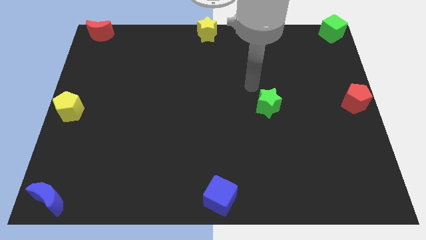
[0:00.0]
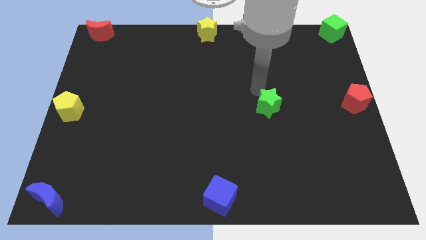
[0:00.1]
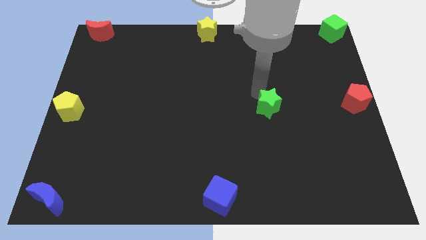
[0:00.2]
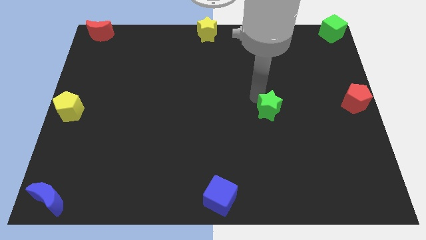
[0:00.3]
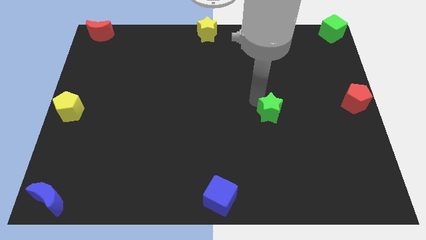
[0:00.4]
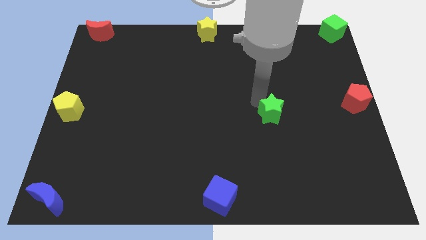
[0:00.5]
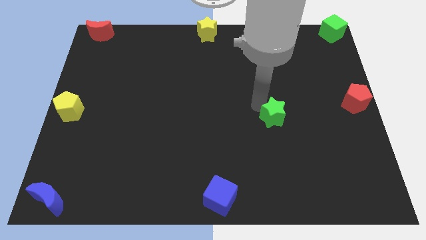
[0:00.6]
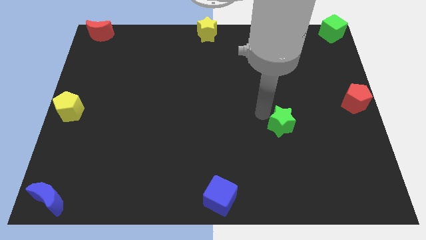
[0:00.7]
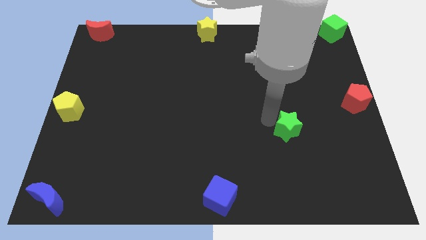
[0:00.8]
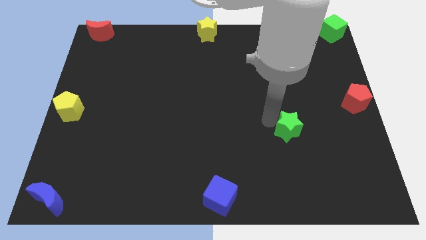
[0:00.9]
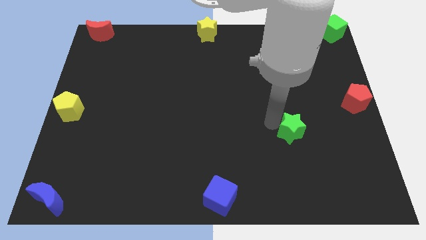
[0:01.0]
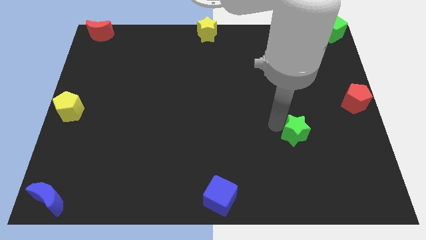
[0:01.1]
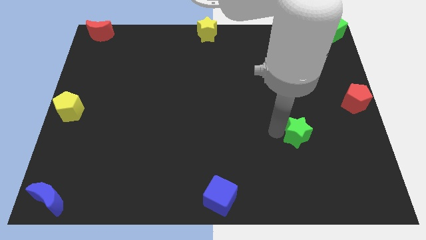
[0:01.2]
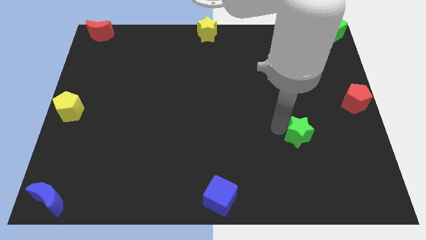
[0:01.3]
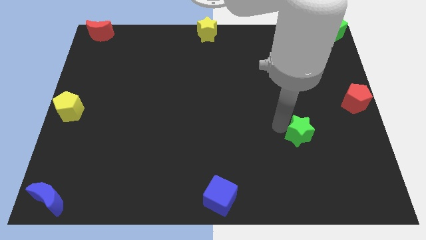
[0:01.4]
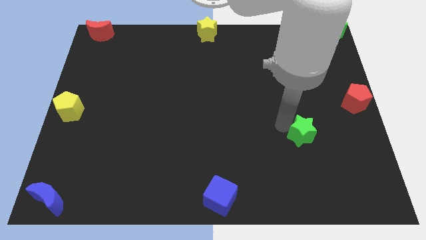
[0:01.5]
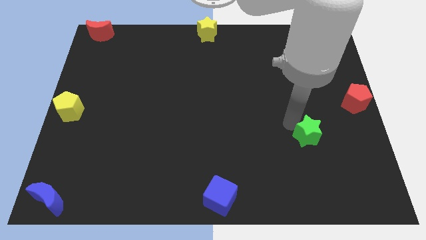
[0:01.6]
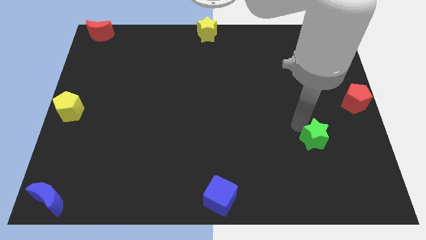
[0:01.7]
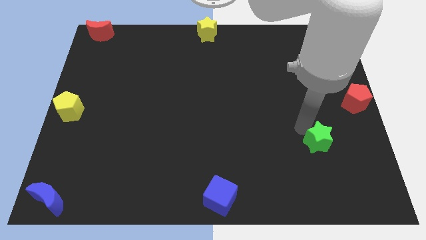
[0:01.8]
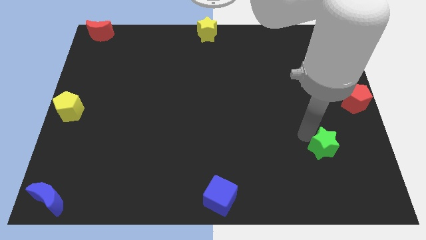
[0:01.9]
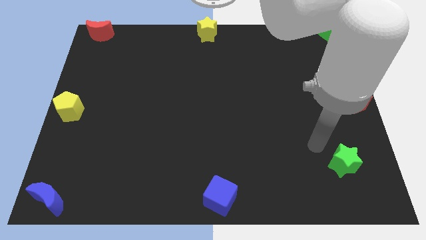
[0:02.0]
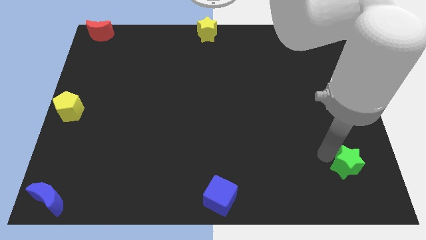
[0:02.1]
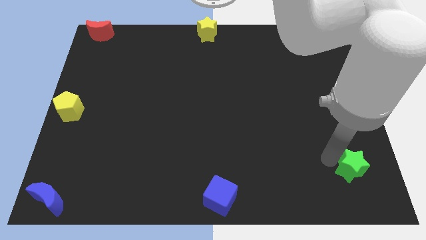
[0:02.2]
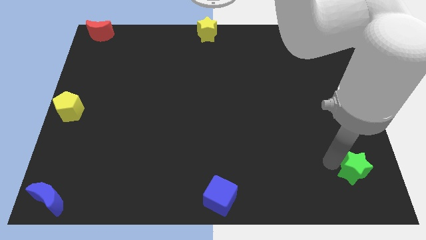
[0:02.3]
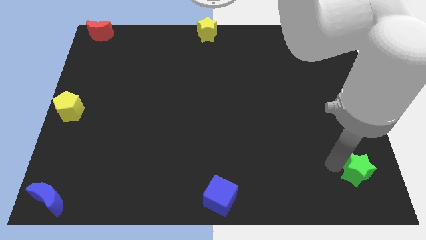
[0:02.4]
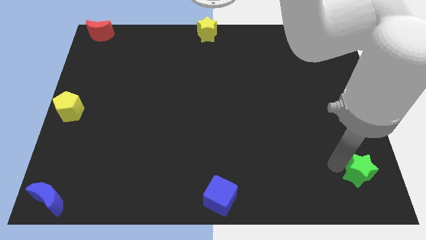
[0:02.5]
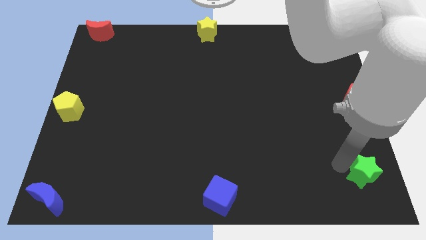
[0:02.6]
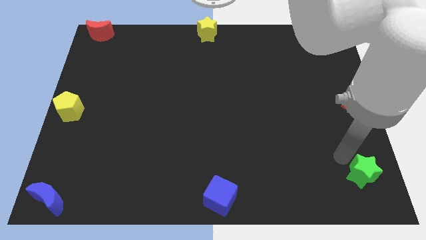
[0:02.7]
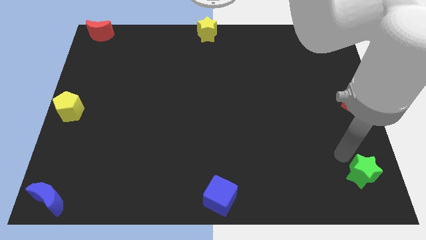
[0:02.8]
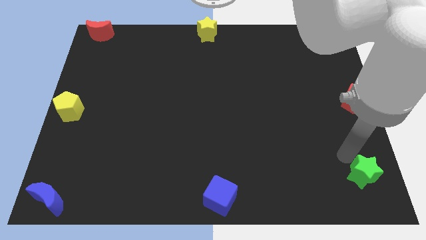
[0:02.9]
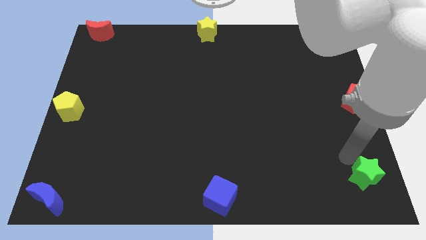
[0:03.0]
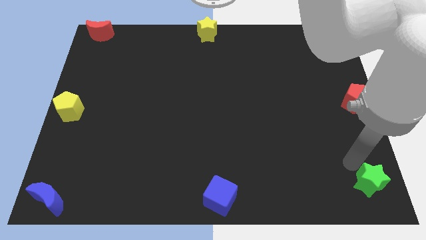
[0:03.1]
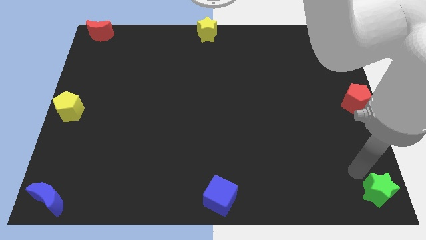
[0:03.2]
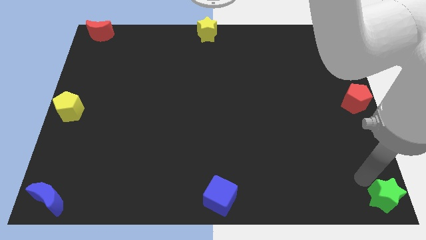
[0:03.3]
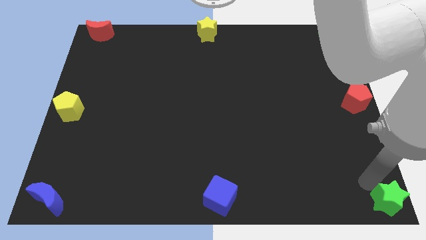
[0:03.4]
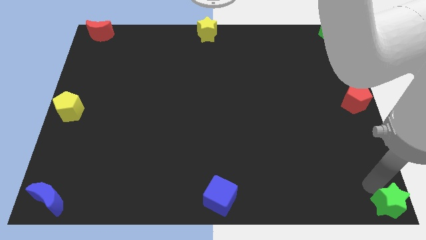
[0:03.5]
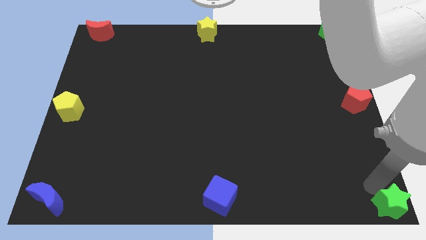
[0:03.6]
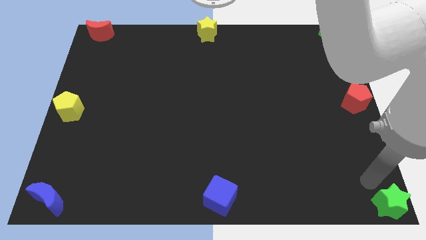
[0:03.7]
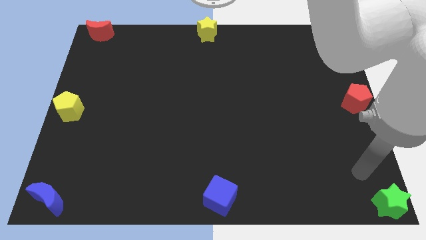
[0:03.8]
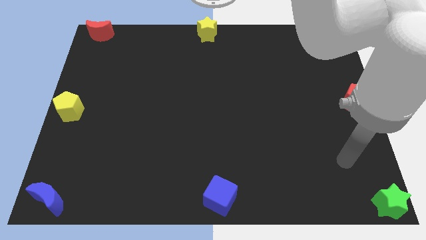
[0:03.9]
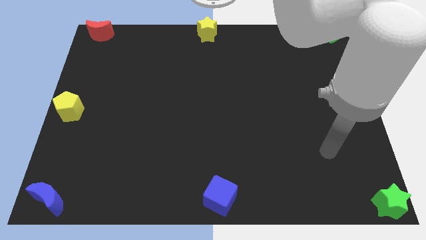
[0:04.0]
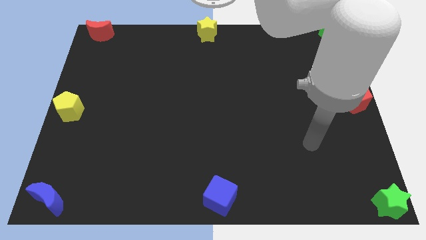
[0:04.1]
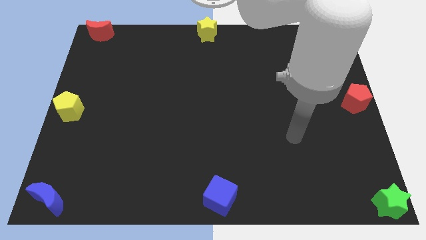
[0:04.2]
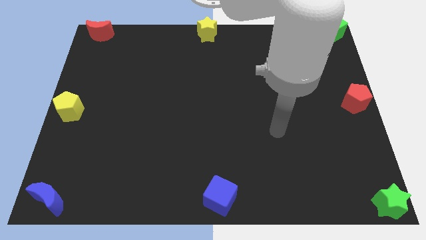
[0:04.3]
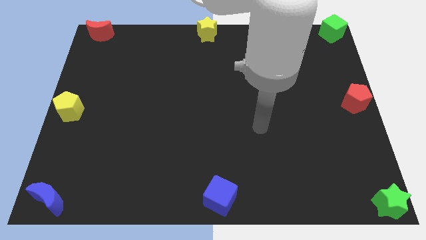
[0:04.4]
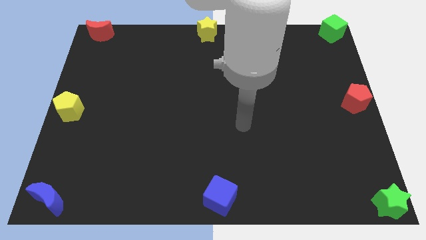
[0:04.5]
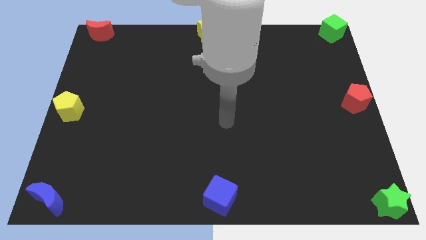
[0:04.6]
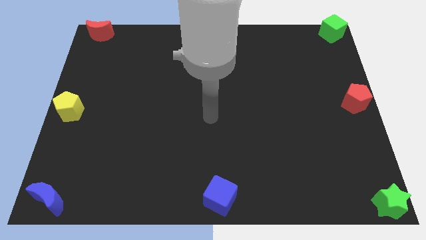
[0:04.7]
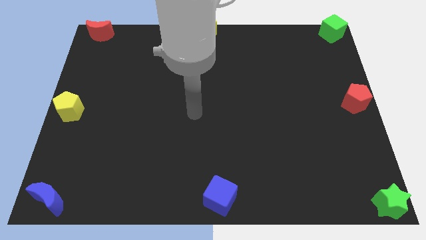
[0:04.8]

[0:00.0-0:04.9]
push green star towards bottom right of the board

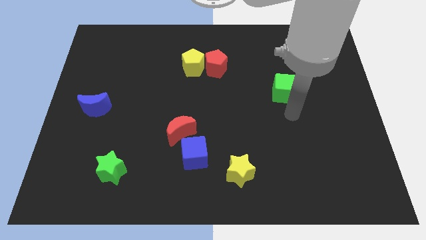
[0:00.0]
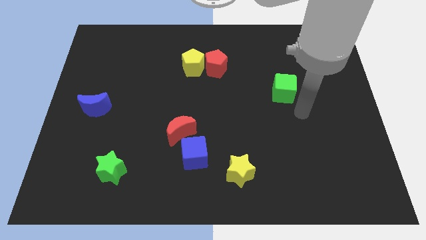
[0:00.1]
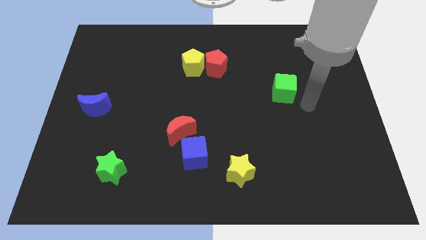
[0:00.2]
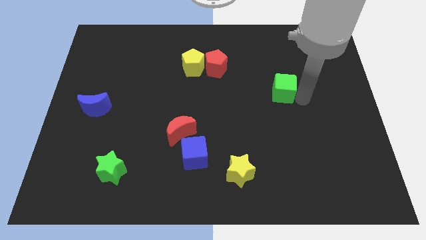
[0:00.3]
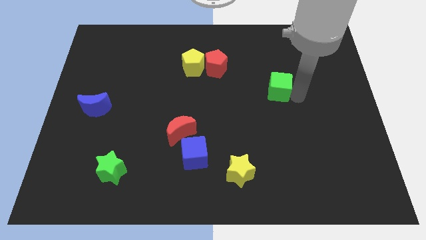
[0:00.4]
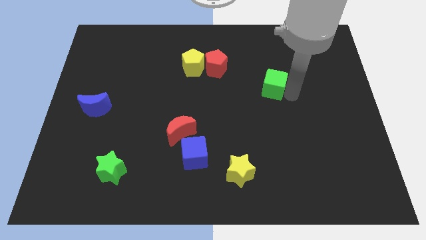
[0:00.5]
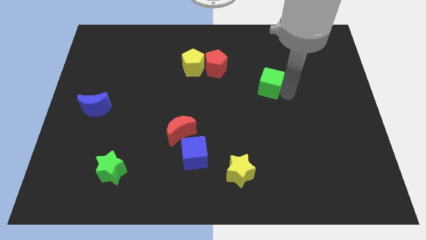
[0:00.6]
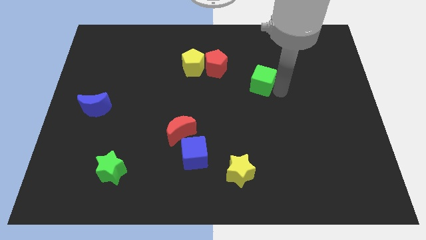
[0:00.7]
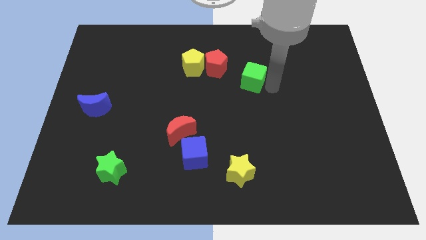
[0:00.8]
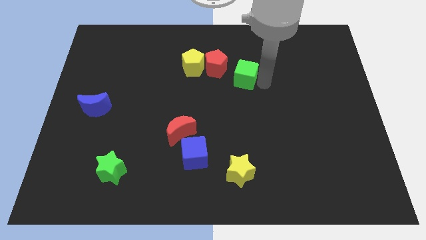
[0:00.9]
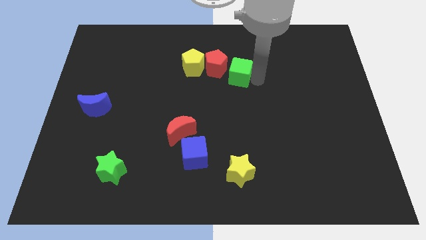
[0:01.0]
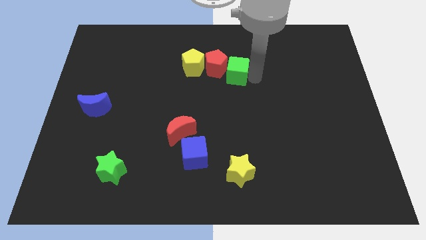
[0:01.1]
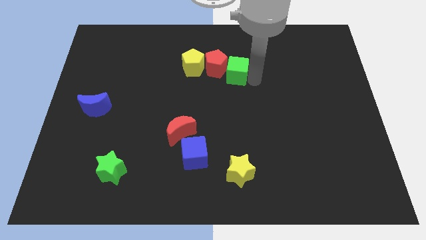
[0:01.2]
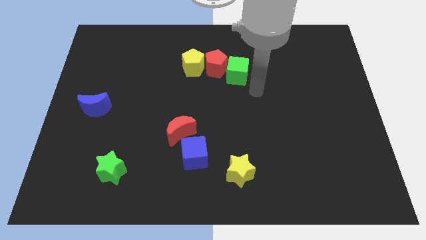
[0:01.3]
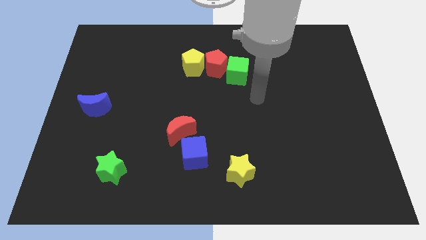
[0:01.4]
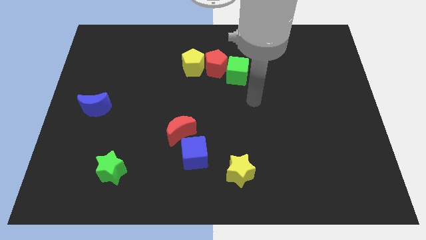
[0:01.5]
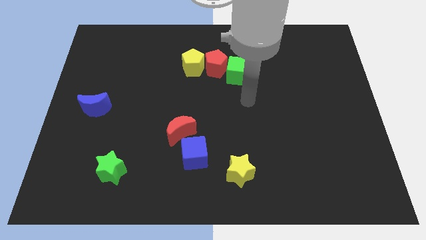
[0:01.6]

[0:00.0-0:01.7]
move the green cube into the red pentagon

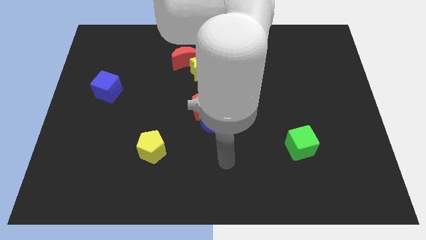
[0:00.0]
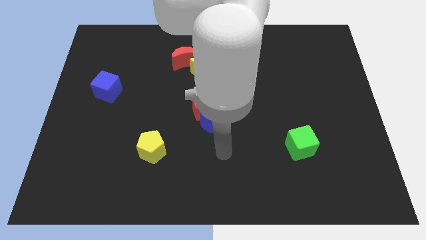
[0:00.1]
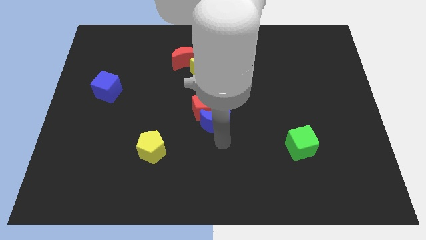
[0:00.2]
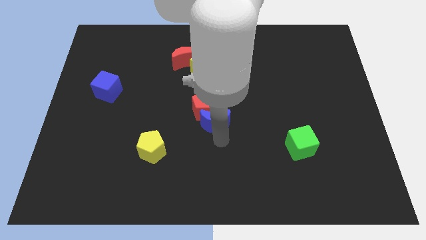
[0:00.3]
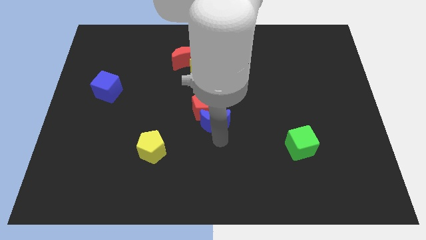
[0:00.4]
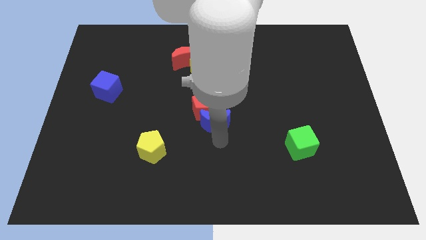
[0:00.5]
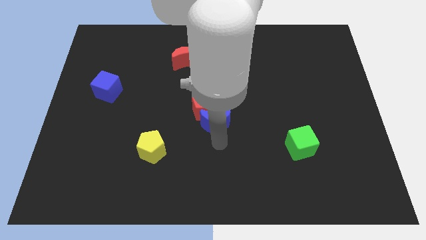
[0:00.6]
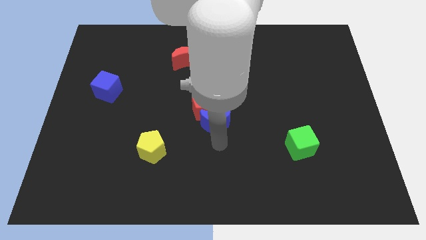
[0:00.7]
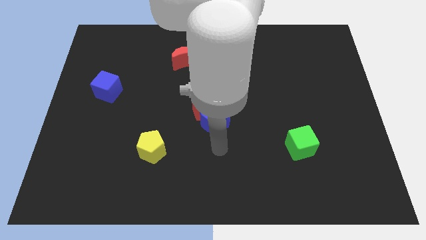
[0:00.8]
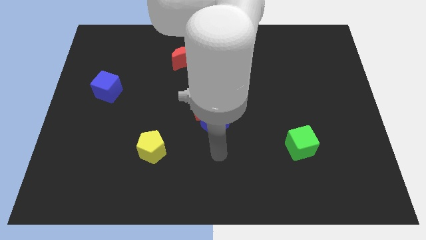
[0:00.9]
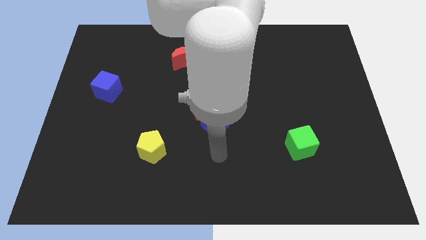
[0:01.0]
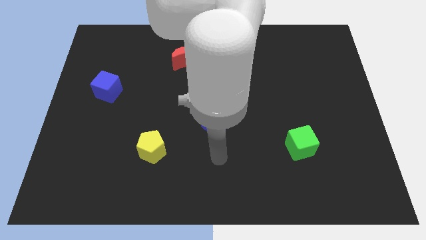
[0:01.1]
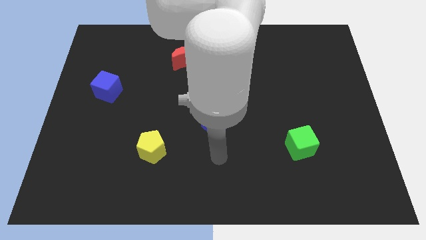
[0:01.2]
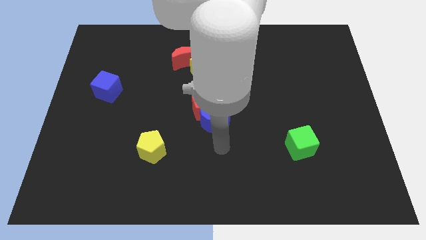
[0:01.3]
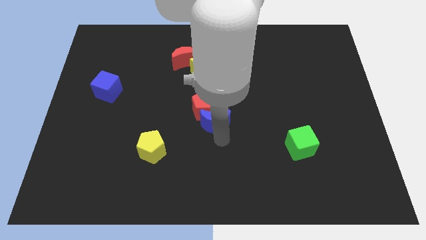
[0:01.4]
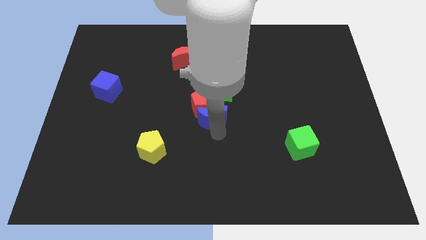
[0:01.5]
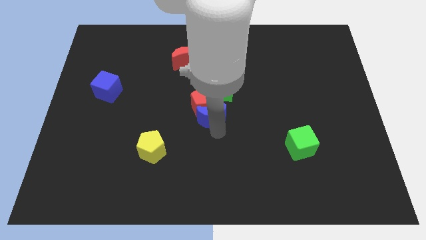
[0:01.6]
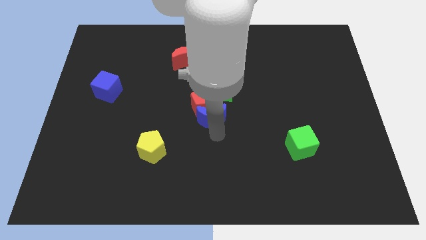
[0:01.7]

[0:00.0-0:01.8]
move your arm below the blue crescent

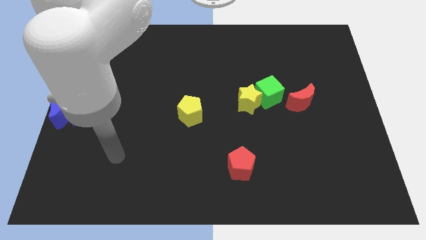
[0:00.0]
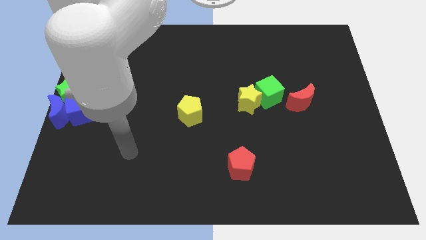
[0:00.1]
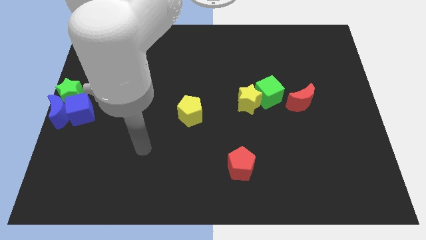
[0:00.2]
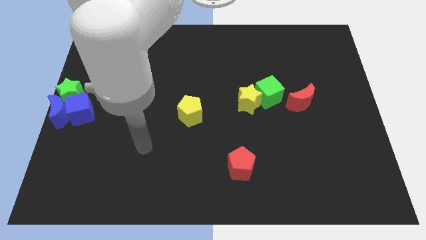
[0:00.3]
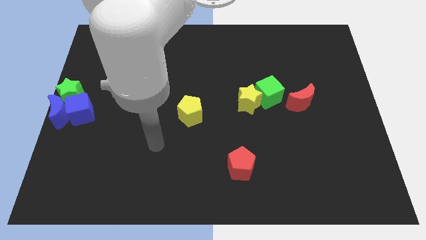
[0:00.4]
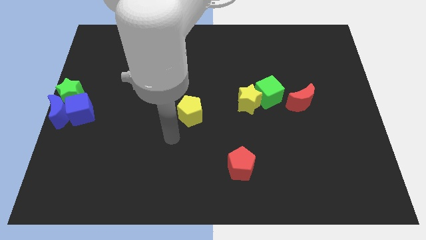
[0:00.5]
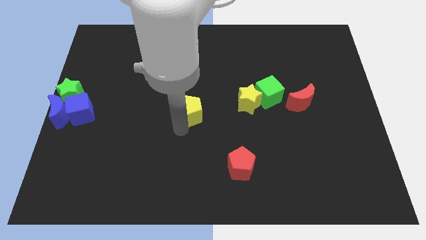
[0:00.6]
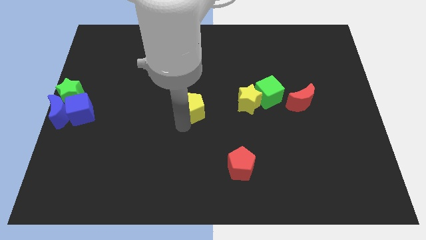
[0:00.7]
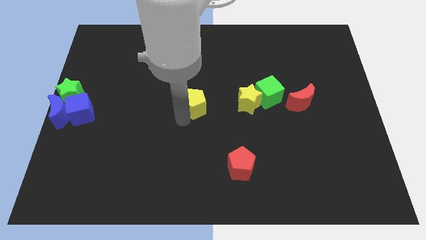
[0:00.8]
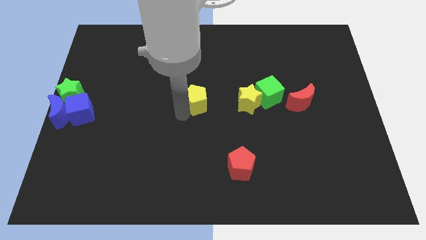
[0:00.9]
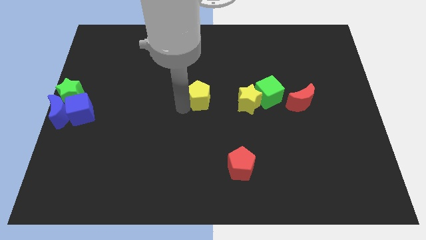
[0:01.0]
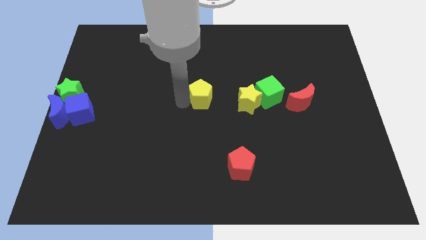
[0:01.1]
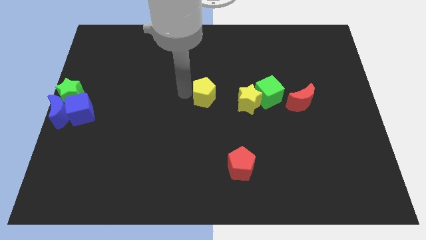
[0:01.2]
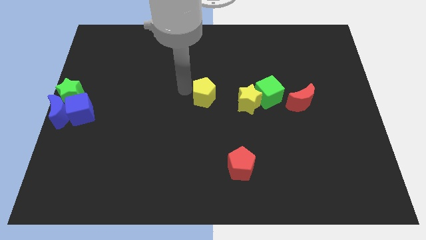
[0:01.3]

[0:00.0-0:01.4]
push the yellow pentagon up slightly
